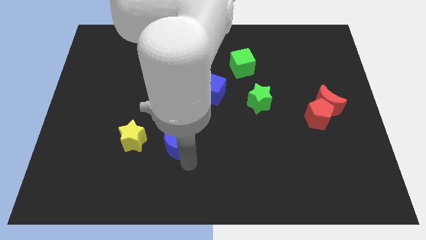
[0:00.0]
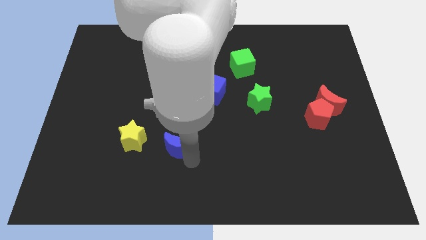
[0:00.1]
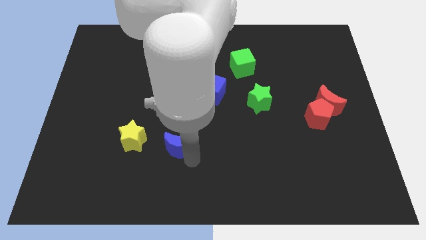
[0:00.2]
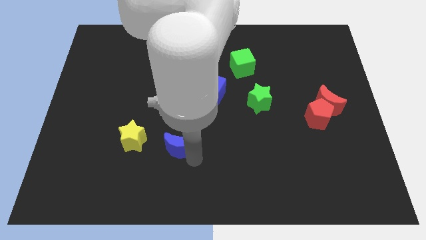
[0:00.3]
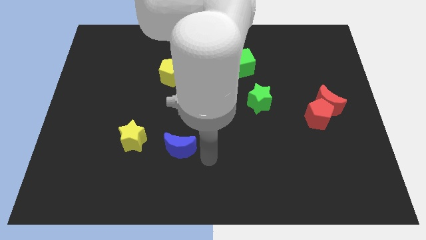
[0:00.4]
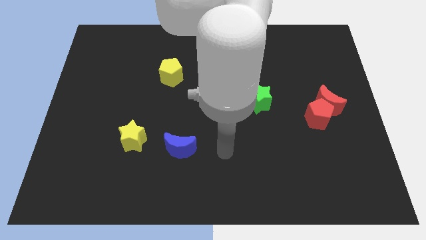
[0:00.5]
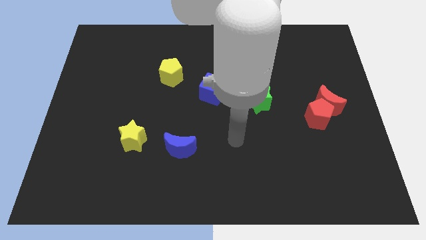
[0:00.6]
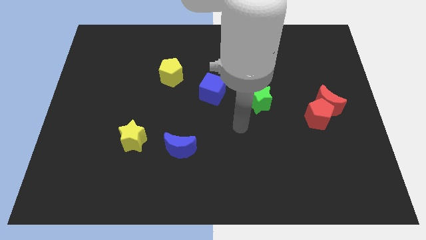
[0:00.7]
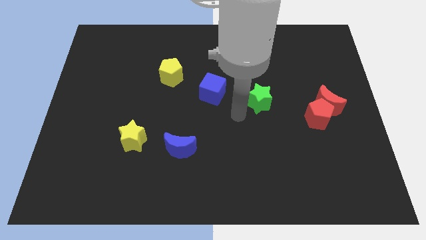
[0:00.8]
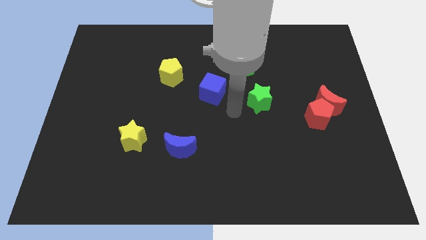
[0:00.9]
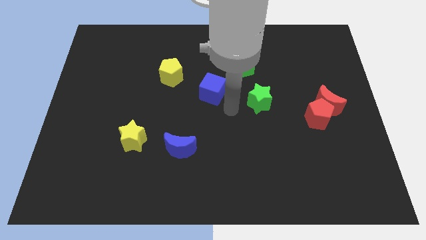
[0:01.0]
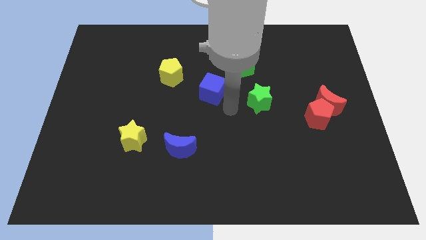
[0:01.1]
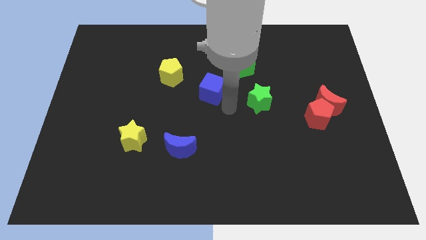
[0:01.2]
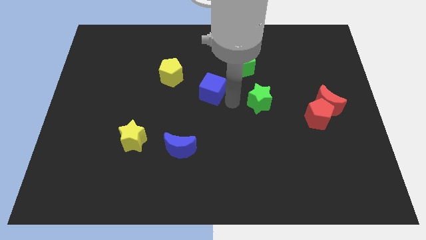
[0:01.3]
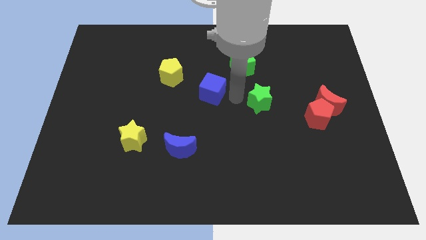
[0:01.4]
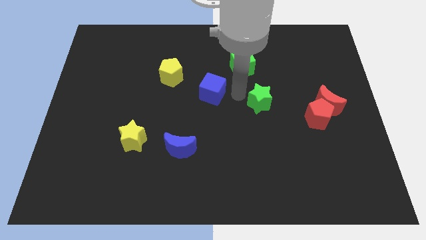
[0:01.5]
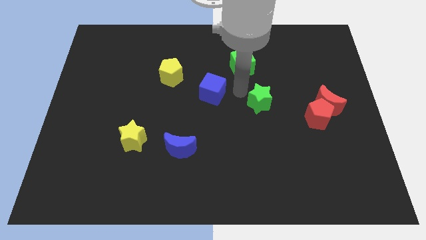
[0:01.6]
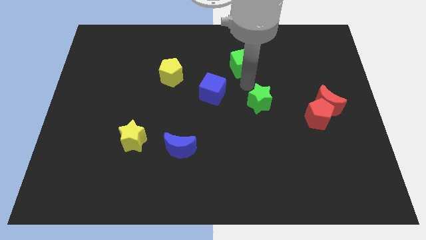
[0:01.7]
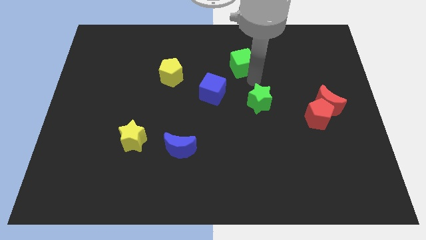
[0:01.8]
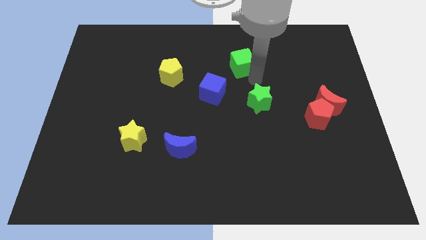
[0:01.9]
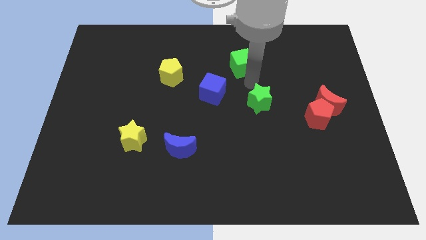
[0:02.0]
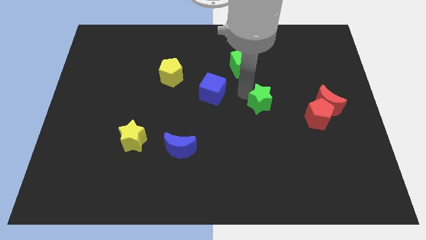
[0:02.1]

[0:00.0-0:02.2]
place your arm between green star and green cube

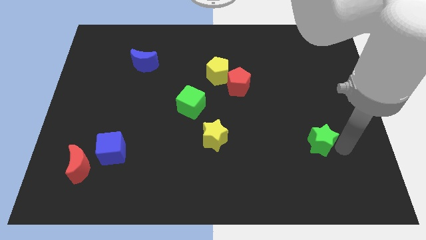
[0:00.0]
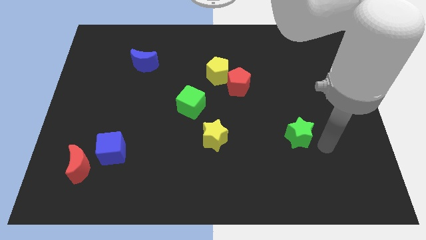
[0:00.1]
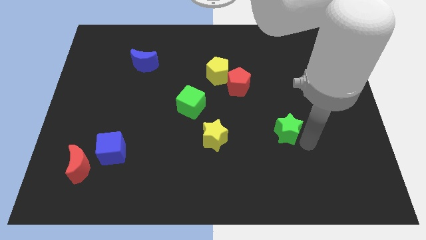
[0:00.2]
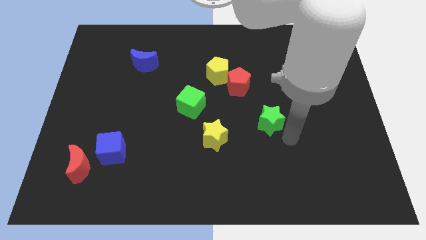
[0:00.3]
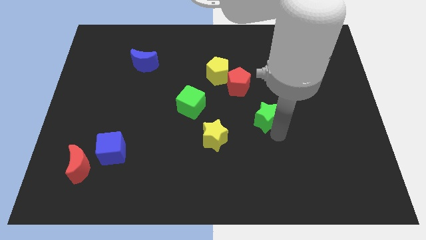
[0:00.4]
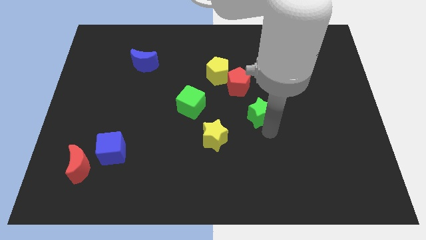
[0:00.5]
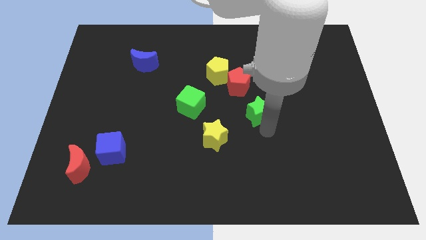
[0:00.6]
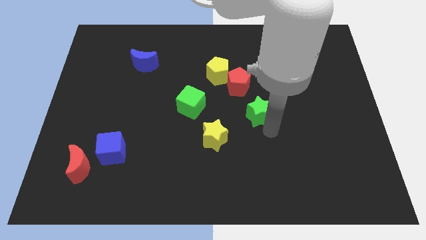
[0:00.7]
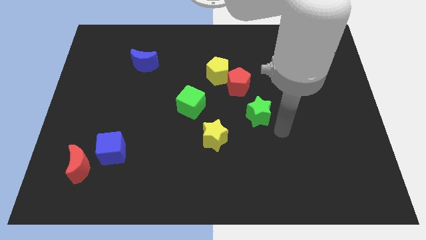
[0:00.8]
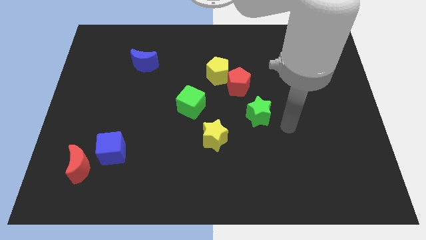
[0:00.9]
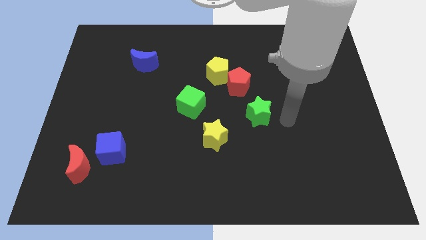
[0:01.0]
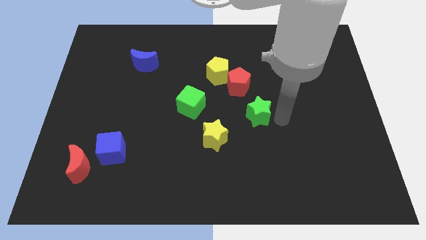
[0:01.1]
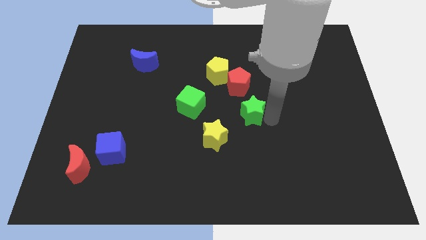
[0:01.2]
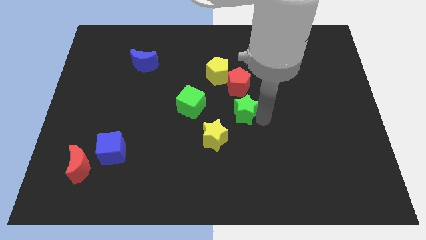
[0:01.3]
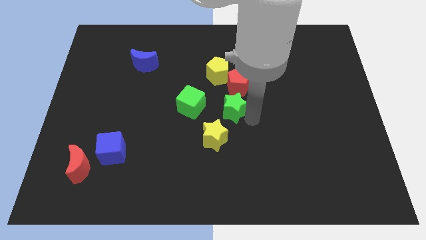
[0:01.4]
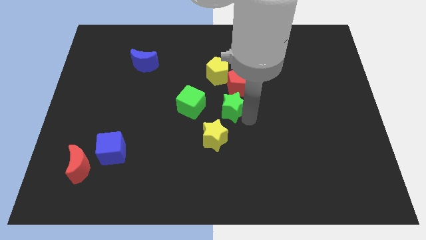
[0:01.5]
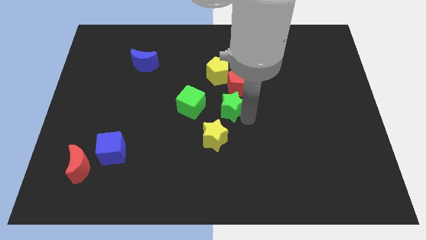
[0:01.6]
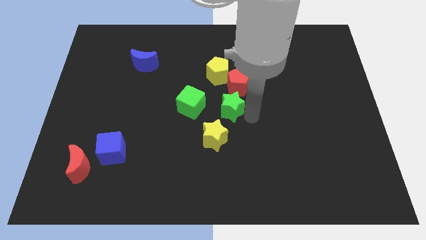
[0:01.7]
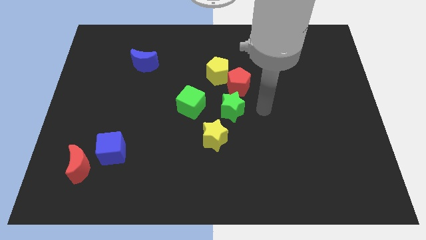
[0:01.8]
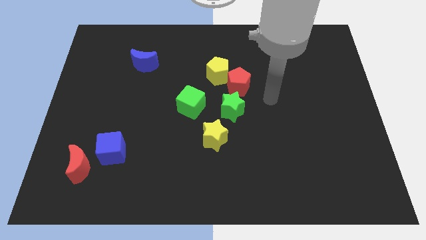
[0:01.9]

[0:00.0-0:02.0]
move the green star towards the right side of the green cube

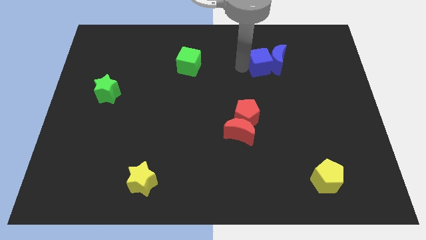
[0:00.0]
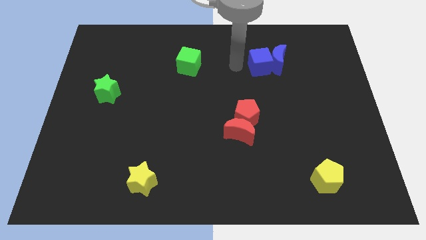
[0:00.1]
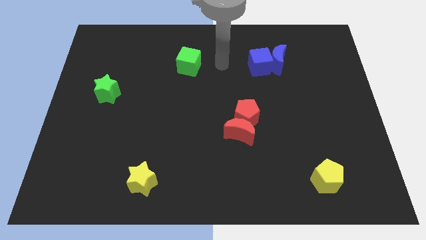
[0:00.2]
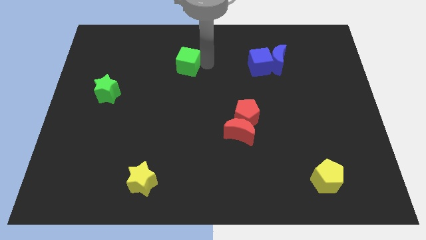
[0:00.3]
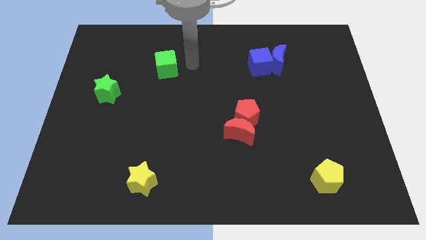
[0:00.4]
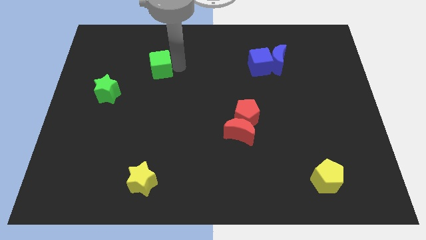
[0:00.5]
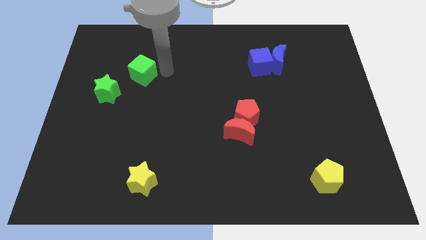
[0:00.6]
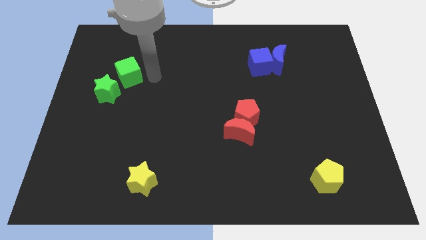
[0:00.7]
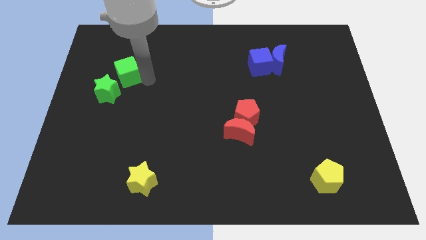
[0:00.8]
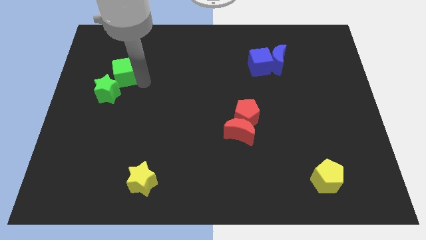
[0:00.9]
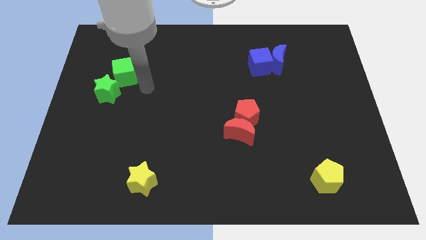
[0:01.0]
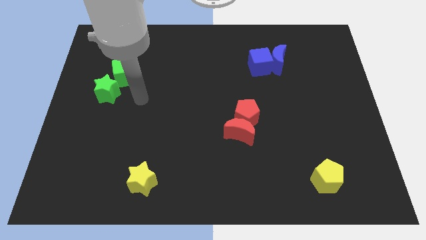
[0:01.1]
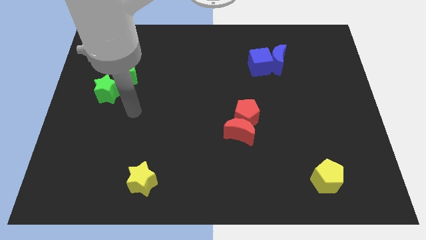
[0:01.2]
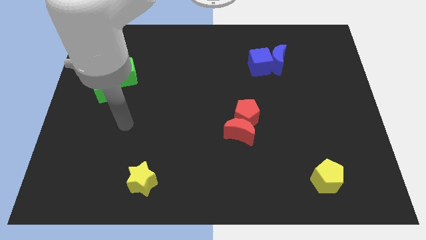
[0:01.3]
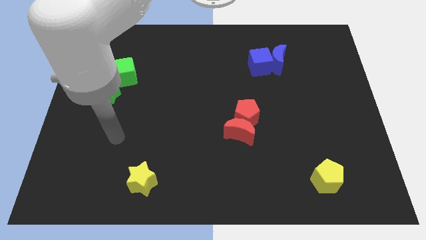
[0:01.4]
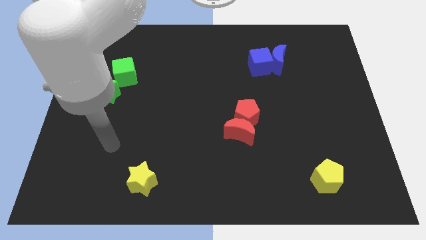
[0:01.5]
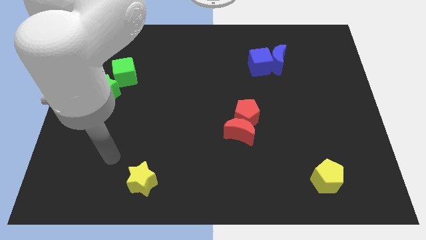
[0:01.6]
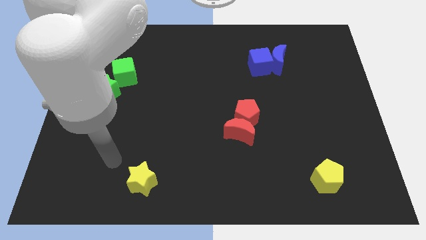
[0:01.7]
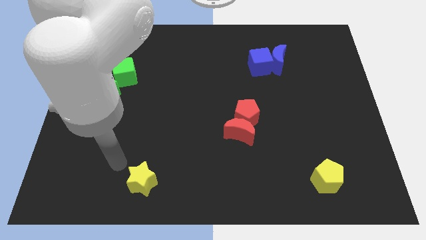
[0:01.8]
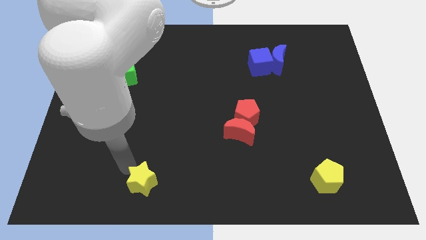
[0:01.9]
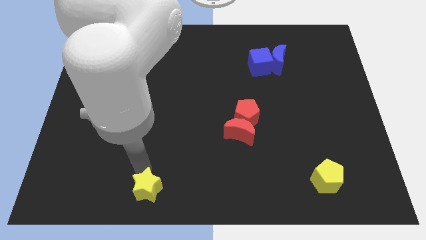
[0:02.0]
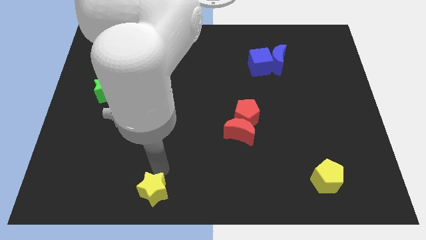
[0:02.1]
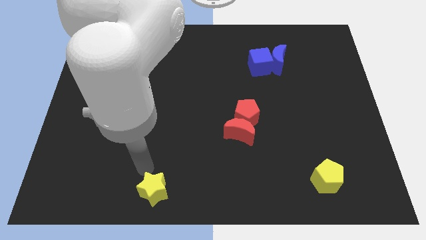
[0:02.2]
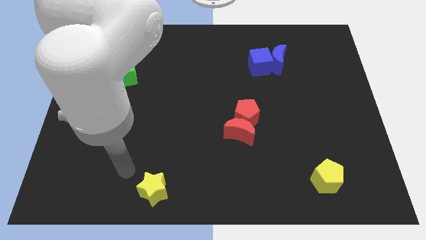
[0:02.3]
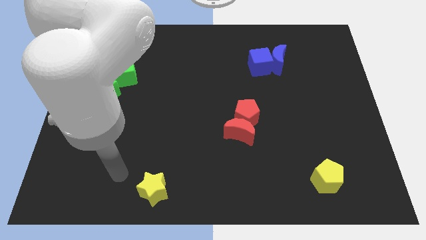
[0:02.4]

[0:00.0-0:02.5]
place the green cube to the top right of green star

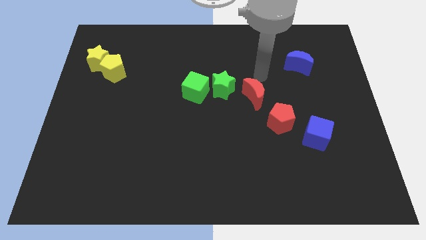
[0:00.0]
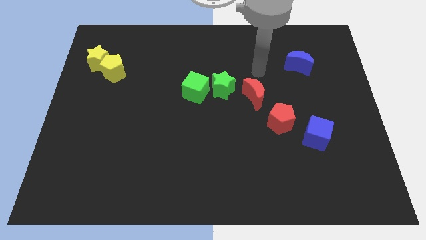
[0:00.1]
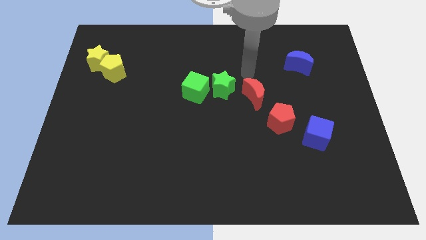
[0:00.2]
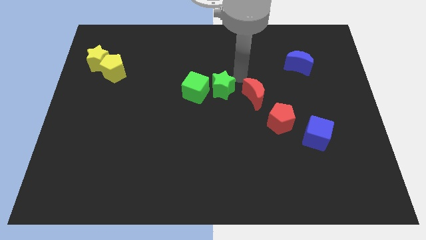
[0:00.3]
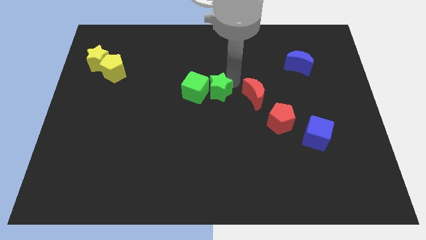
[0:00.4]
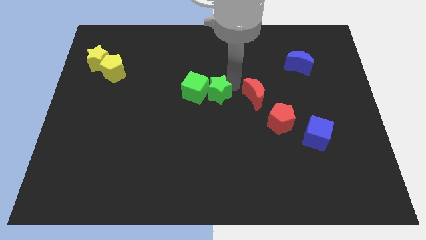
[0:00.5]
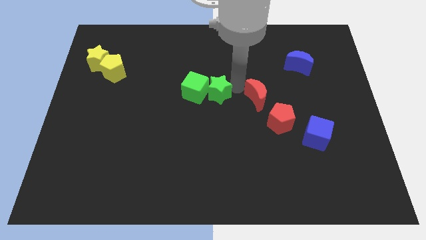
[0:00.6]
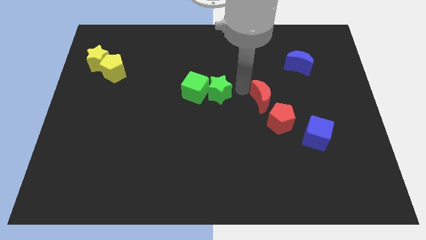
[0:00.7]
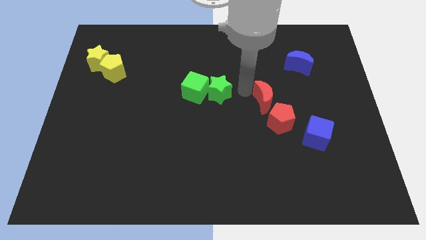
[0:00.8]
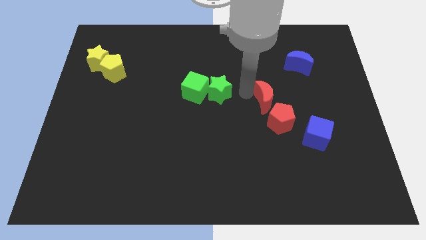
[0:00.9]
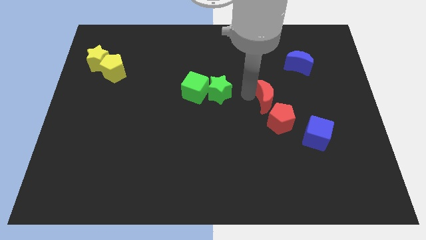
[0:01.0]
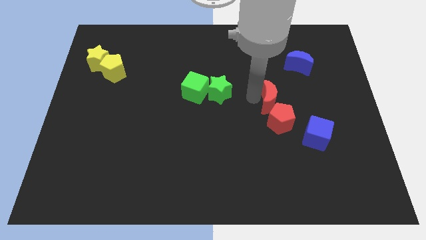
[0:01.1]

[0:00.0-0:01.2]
move the red moon close to the red pentagon

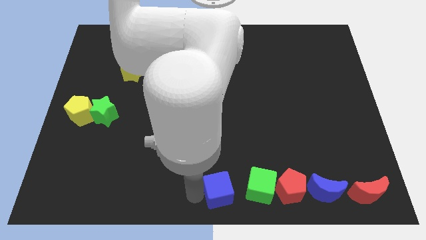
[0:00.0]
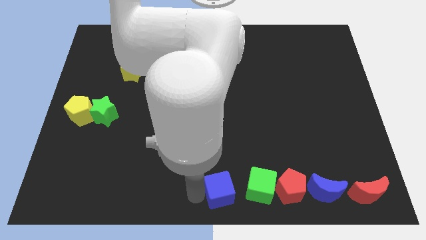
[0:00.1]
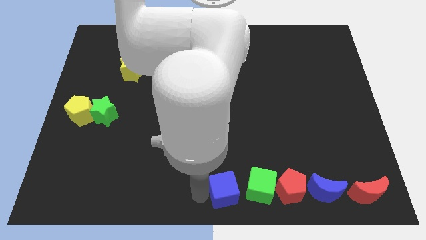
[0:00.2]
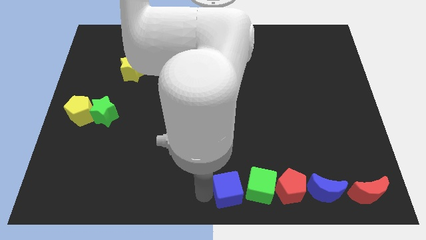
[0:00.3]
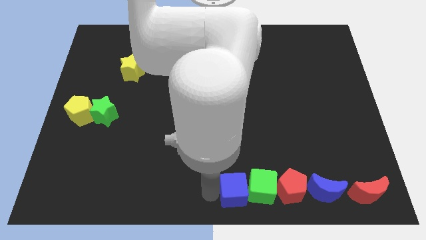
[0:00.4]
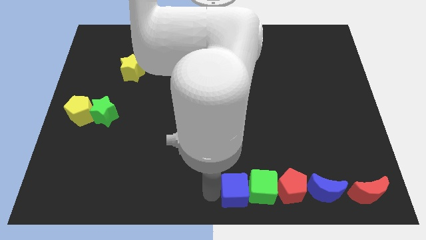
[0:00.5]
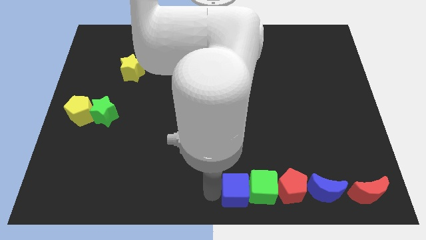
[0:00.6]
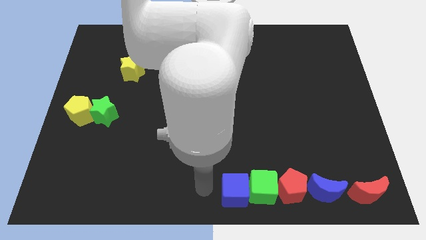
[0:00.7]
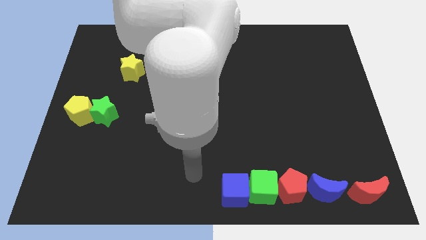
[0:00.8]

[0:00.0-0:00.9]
push the blue cube into the green cube

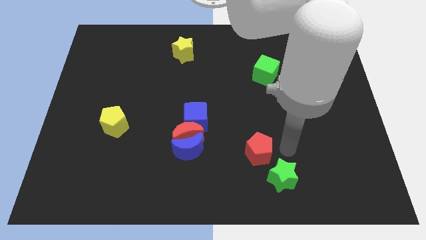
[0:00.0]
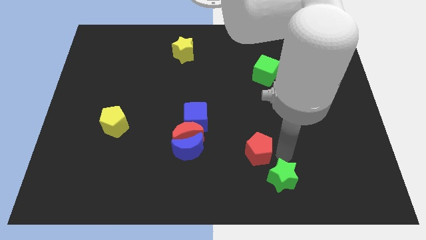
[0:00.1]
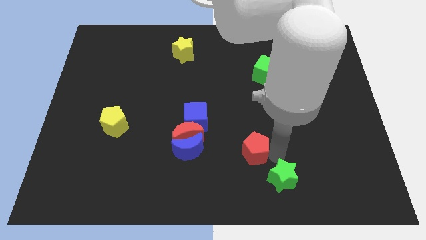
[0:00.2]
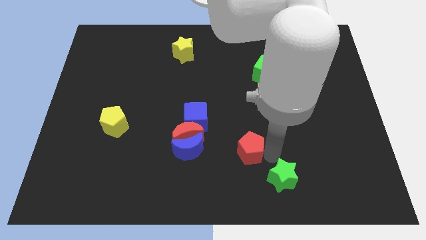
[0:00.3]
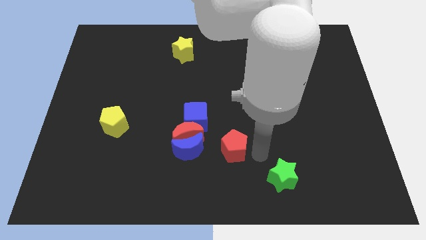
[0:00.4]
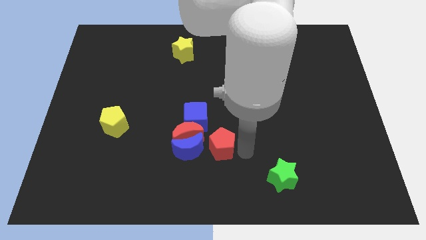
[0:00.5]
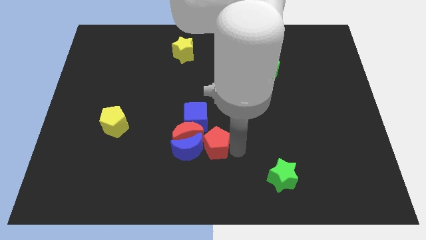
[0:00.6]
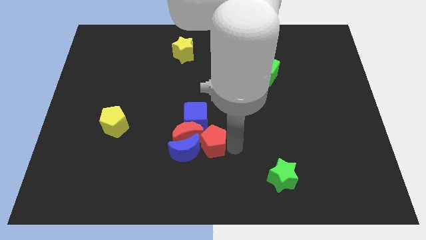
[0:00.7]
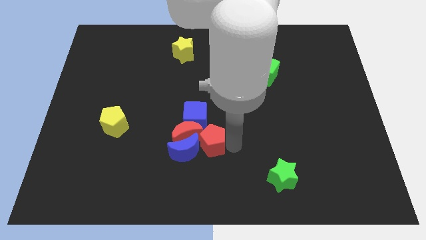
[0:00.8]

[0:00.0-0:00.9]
drag the red pentagon into group of blocks
